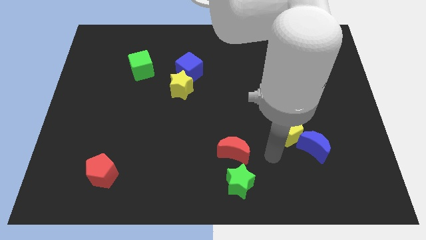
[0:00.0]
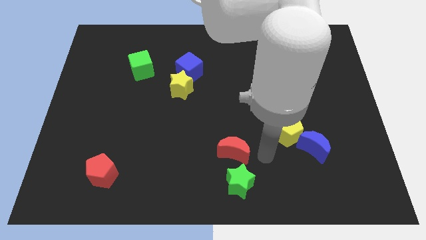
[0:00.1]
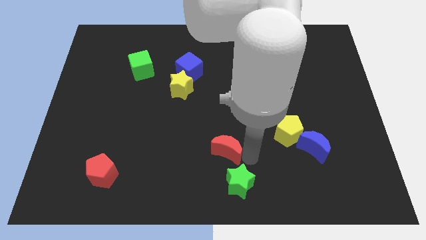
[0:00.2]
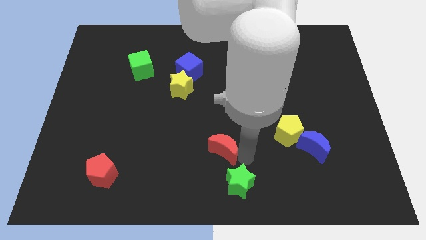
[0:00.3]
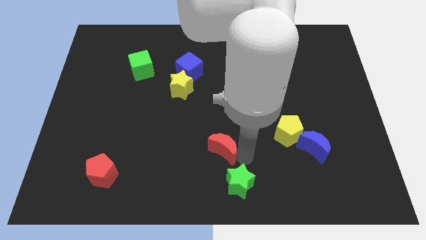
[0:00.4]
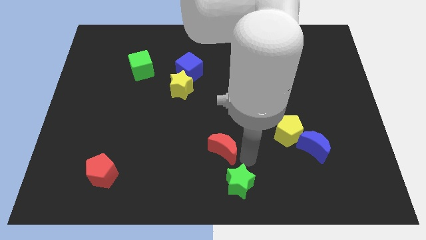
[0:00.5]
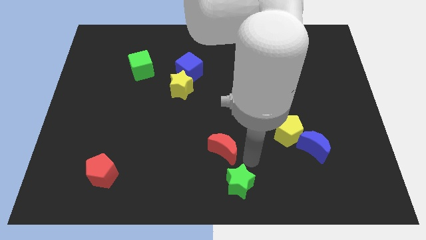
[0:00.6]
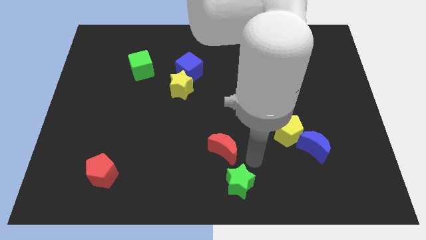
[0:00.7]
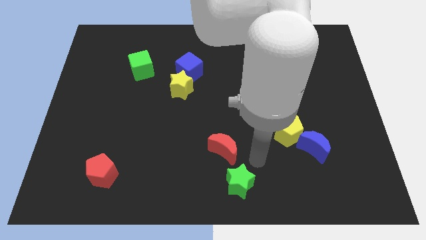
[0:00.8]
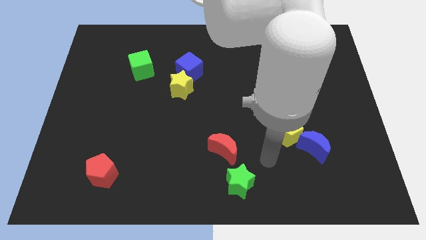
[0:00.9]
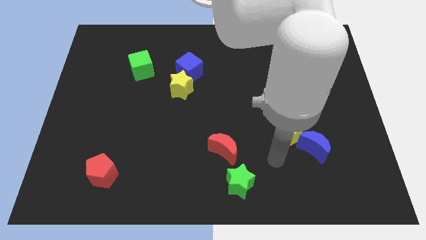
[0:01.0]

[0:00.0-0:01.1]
move the red moon slightly to the left

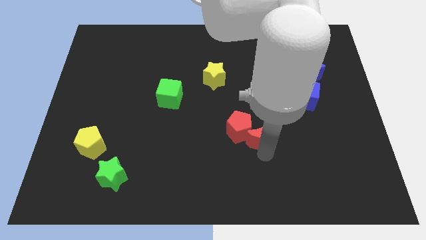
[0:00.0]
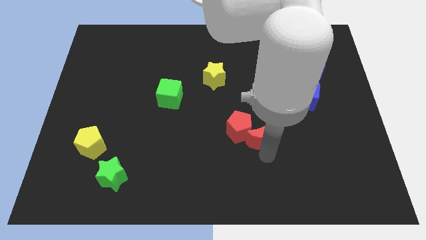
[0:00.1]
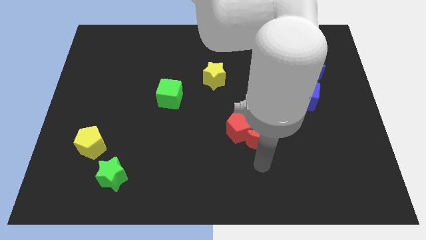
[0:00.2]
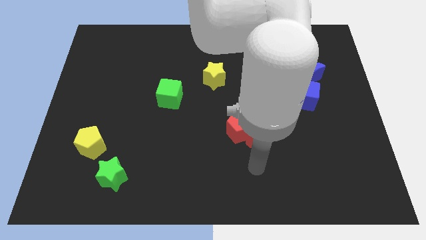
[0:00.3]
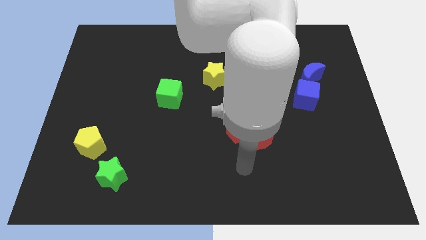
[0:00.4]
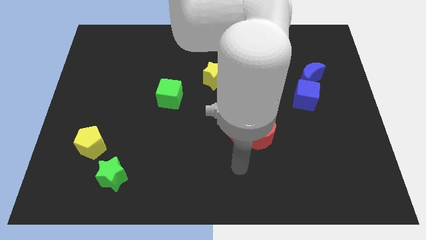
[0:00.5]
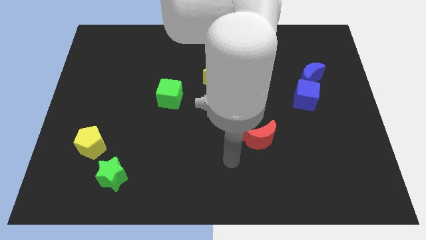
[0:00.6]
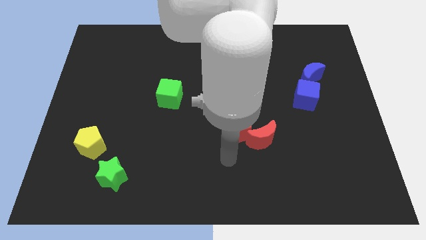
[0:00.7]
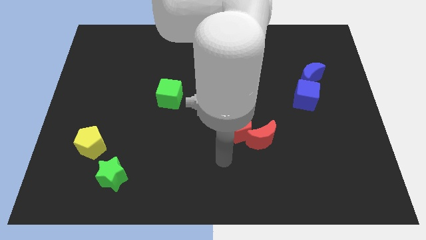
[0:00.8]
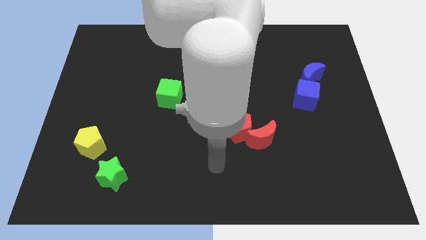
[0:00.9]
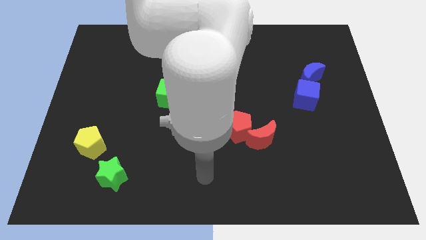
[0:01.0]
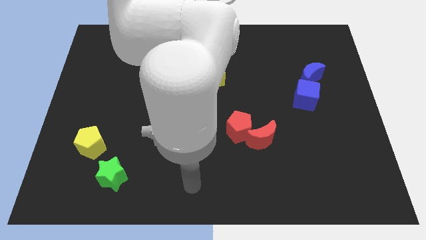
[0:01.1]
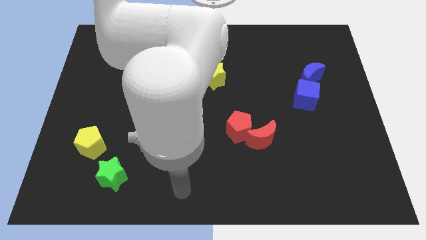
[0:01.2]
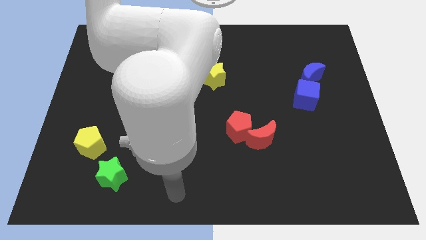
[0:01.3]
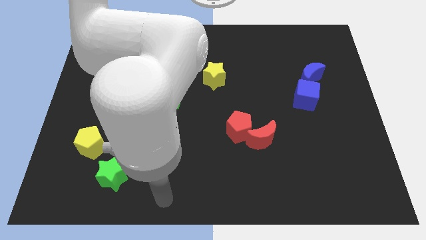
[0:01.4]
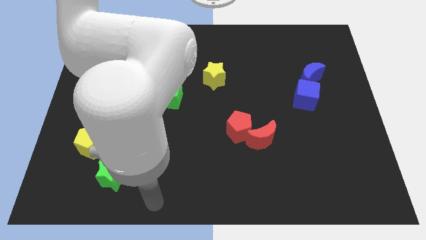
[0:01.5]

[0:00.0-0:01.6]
move your arm away from the red crescent

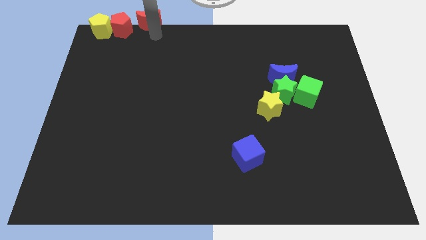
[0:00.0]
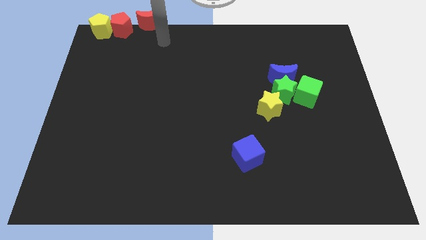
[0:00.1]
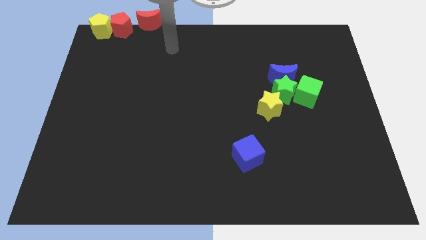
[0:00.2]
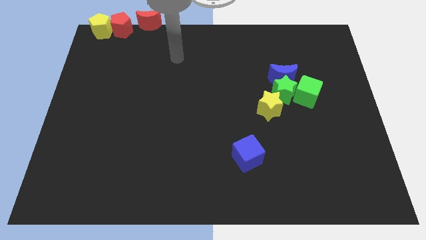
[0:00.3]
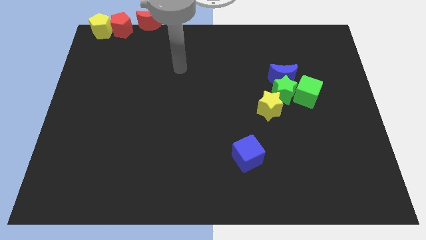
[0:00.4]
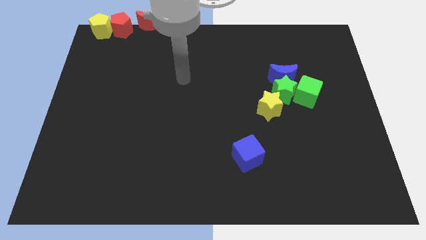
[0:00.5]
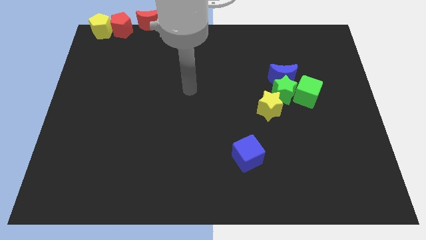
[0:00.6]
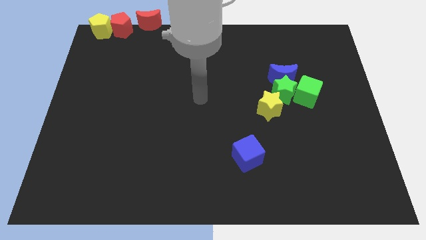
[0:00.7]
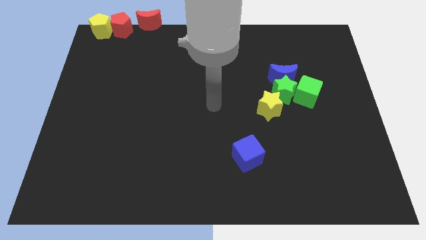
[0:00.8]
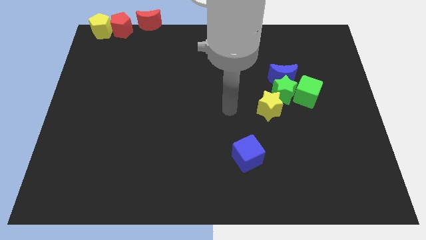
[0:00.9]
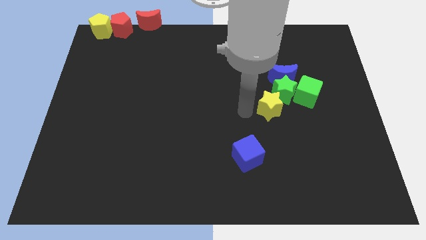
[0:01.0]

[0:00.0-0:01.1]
move your arm to the left of yellow star

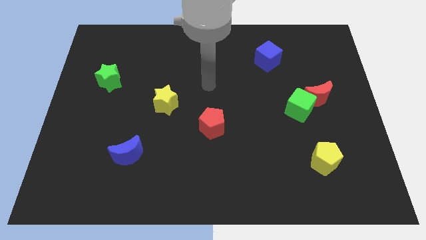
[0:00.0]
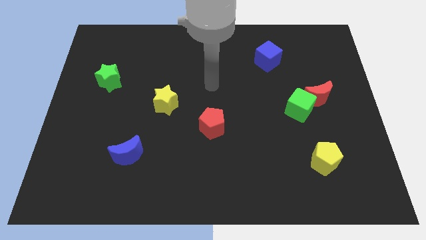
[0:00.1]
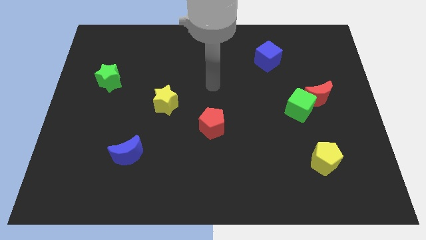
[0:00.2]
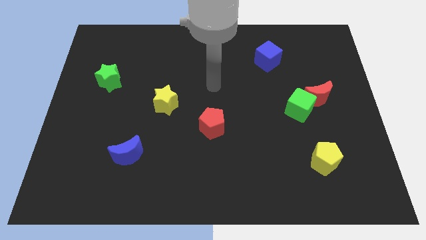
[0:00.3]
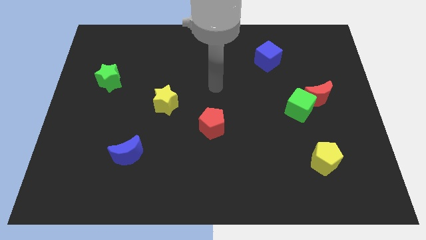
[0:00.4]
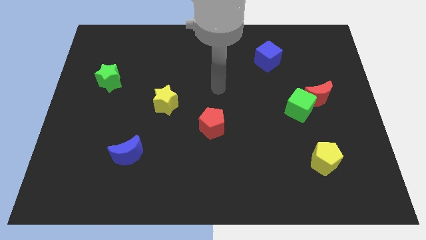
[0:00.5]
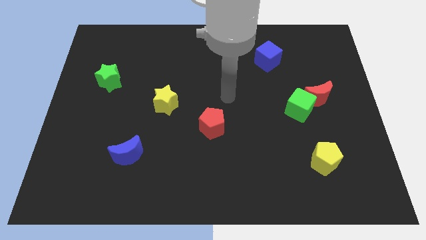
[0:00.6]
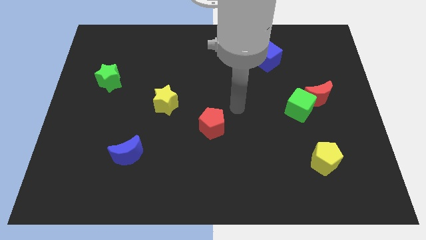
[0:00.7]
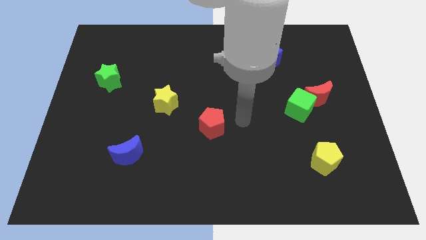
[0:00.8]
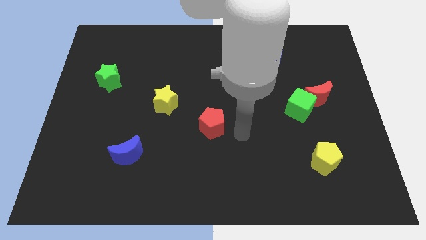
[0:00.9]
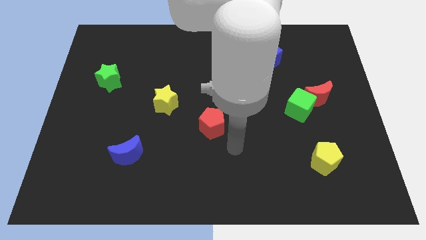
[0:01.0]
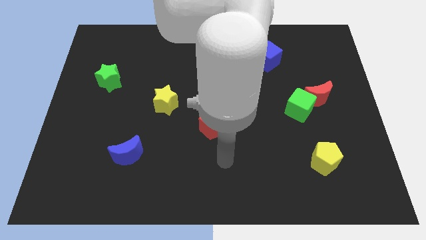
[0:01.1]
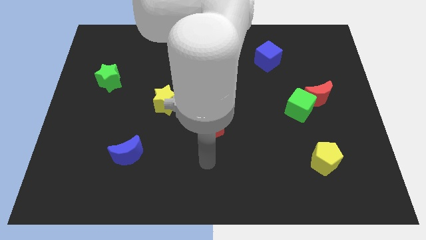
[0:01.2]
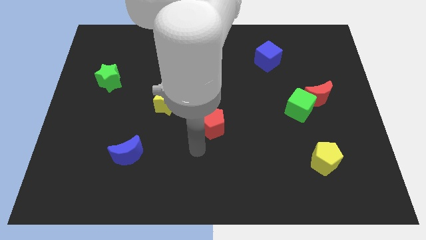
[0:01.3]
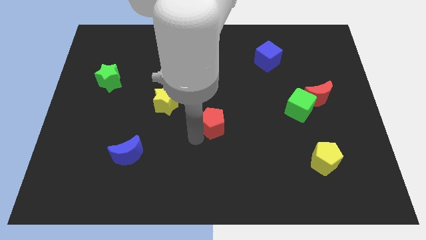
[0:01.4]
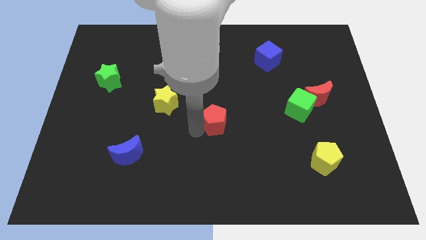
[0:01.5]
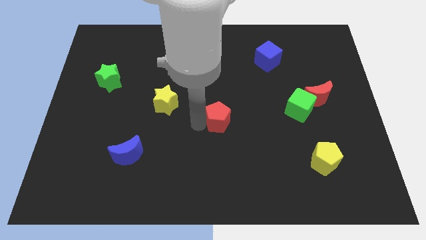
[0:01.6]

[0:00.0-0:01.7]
slightly push the red pentagon on the board

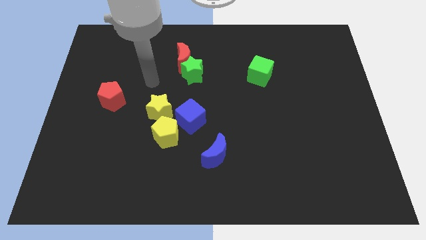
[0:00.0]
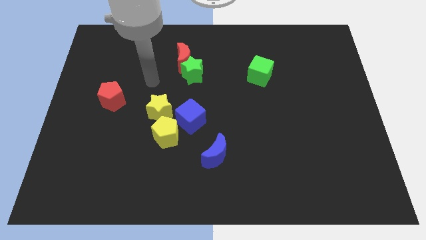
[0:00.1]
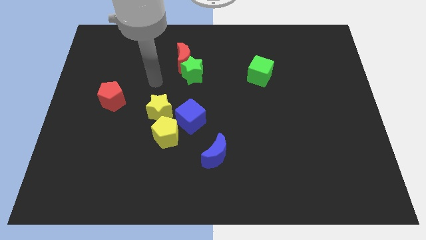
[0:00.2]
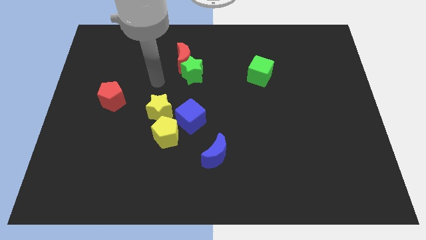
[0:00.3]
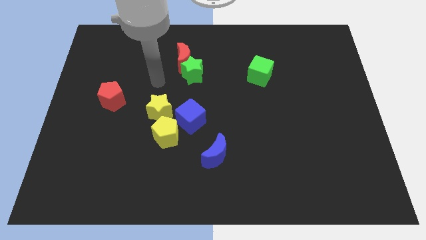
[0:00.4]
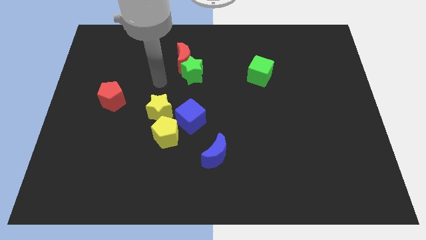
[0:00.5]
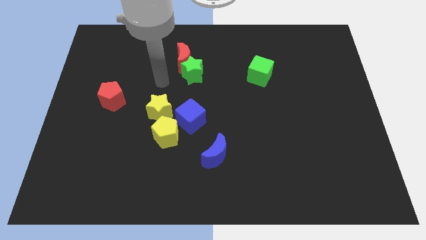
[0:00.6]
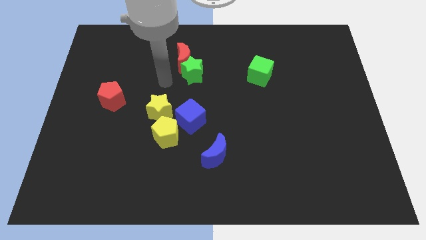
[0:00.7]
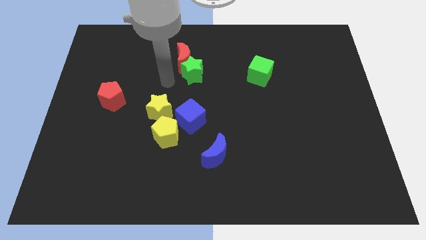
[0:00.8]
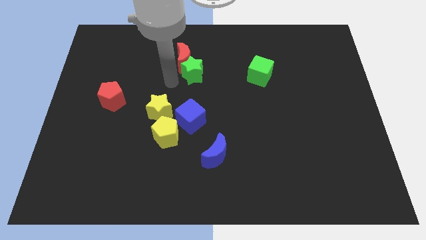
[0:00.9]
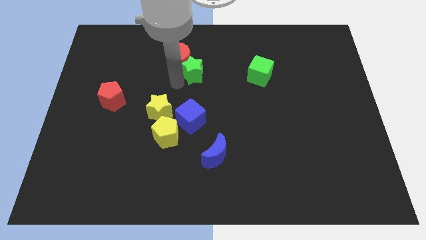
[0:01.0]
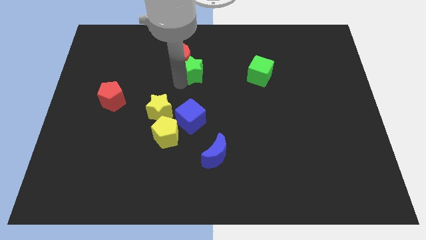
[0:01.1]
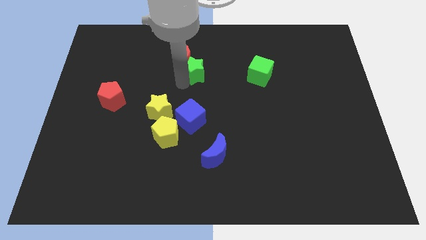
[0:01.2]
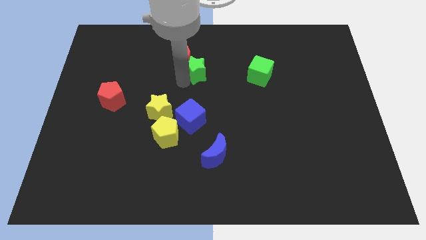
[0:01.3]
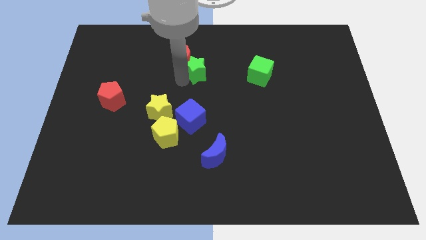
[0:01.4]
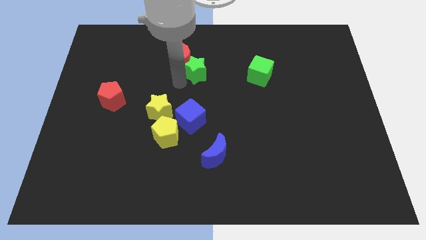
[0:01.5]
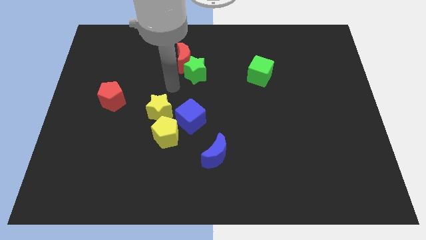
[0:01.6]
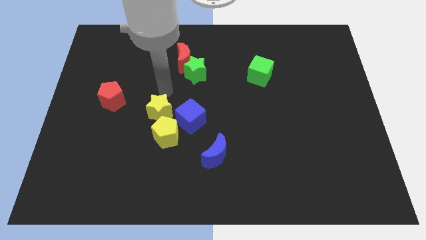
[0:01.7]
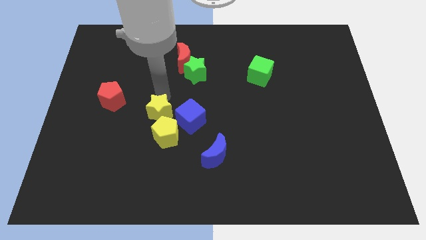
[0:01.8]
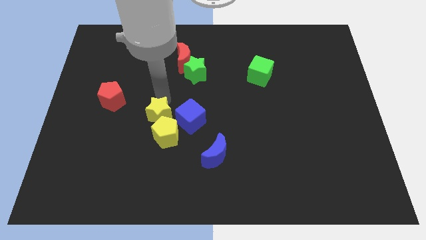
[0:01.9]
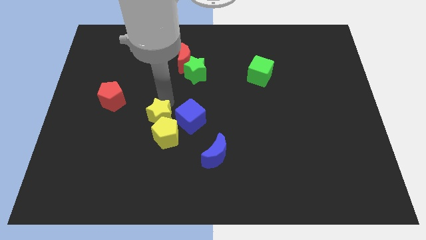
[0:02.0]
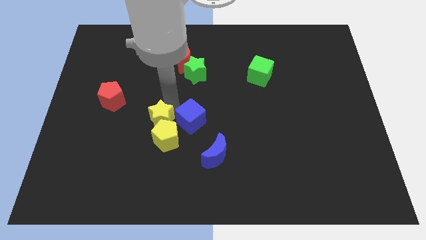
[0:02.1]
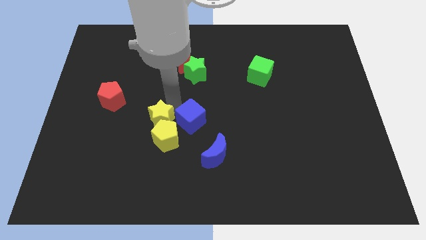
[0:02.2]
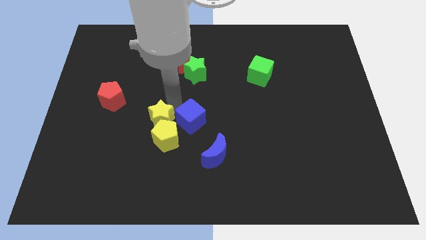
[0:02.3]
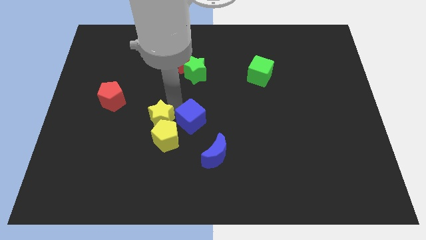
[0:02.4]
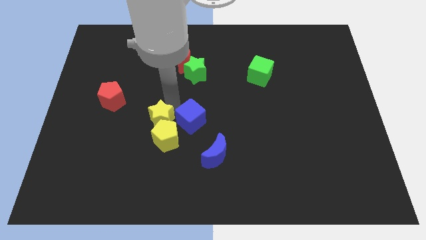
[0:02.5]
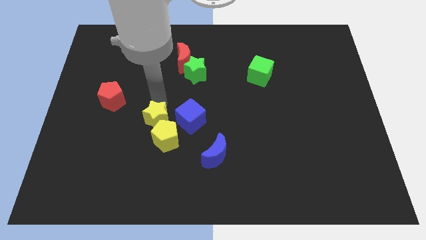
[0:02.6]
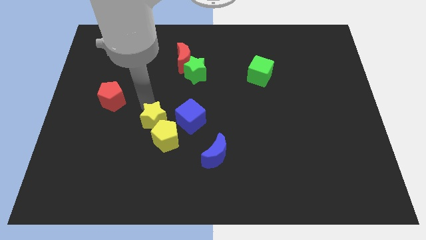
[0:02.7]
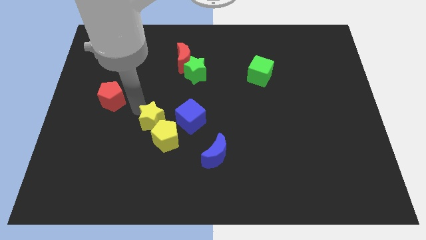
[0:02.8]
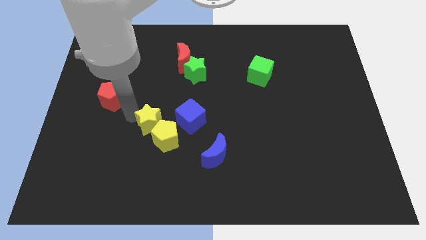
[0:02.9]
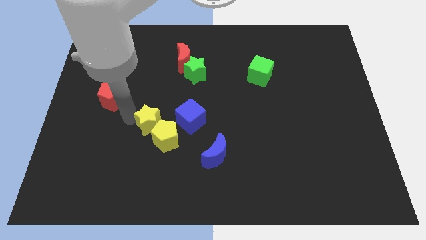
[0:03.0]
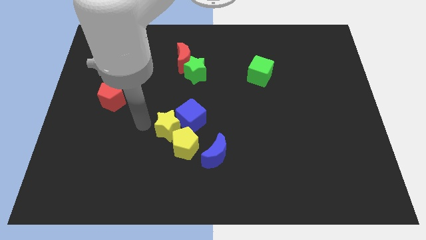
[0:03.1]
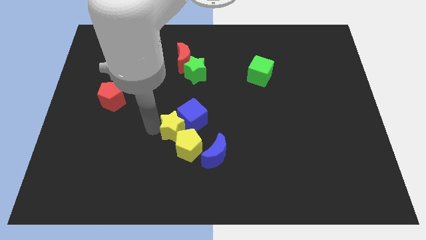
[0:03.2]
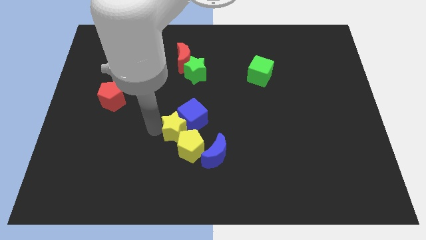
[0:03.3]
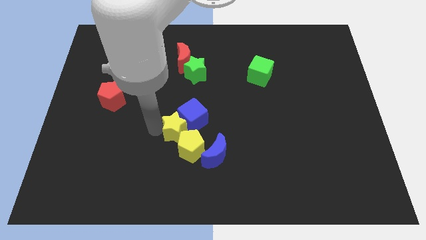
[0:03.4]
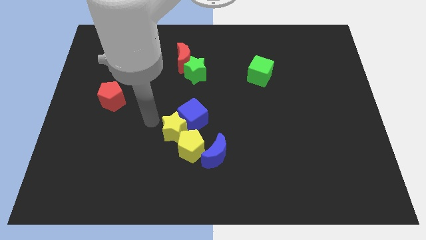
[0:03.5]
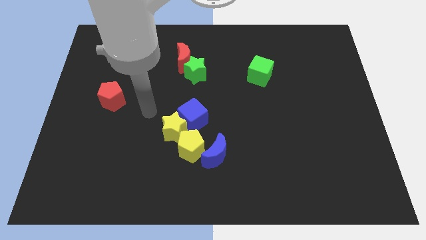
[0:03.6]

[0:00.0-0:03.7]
push yellow pentagon slightly with yellow star
